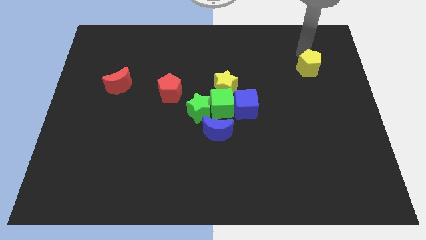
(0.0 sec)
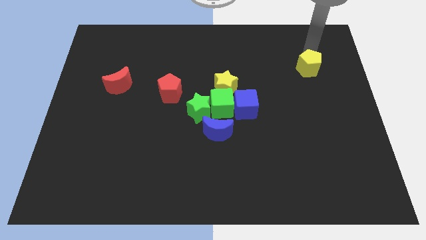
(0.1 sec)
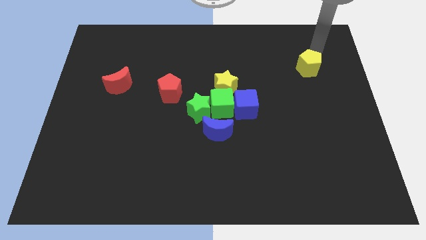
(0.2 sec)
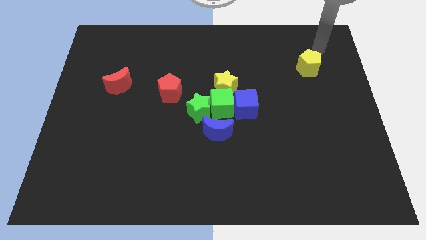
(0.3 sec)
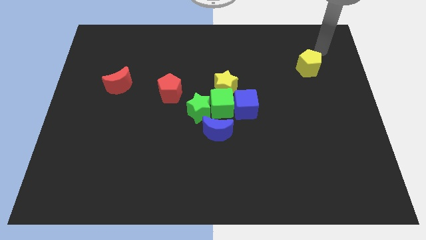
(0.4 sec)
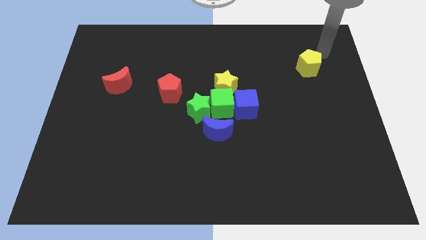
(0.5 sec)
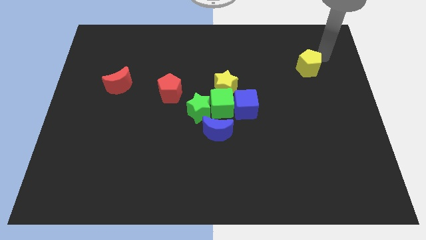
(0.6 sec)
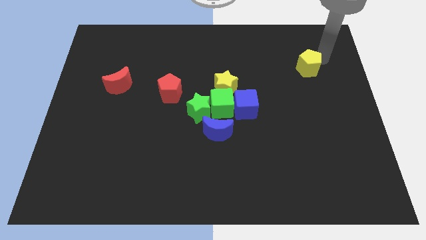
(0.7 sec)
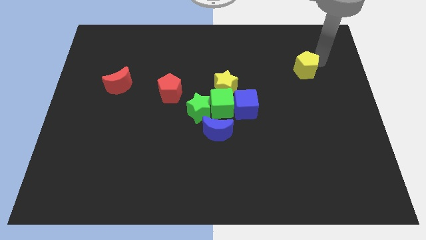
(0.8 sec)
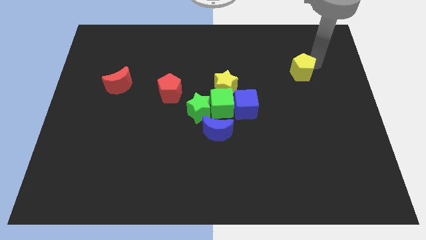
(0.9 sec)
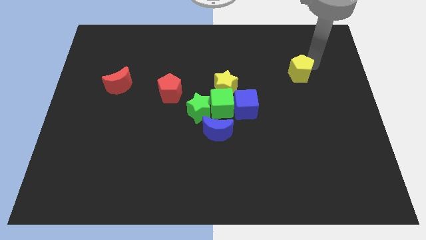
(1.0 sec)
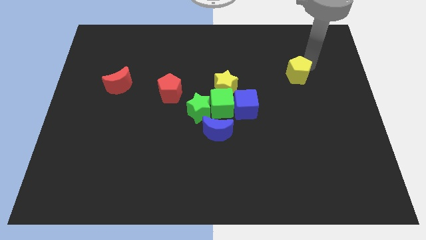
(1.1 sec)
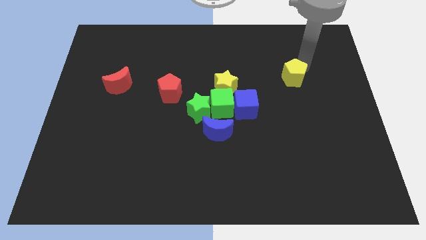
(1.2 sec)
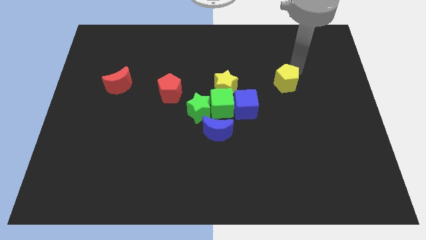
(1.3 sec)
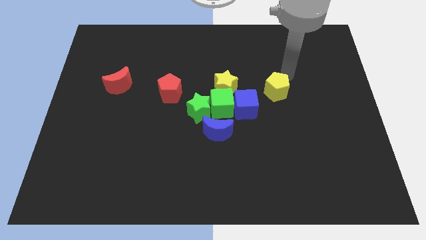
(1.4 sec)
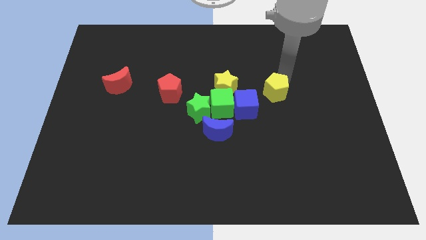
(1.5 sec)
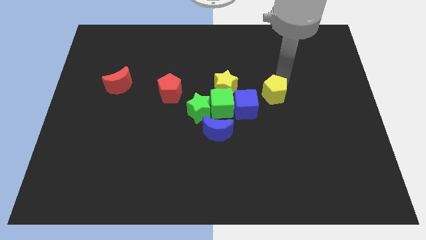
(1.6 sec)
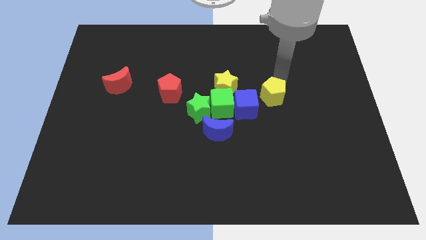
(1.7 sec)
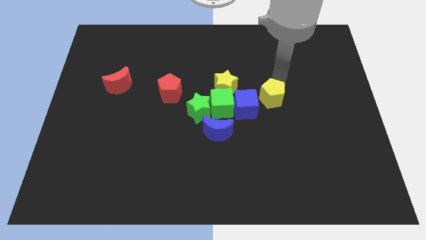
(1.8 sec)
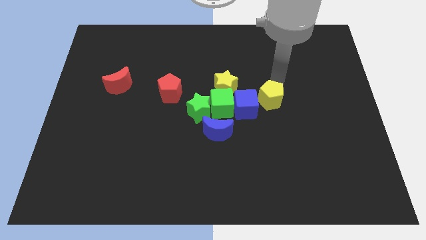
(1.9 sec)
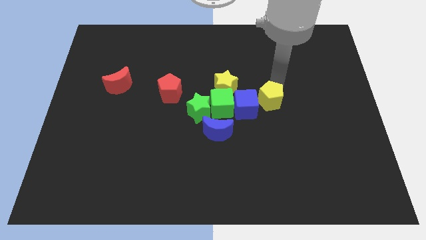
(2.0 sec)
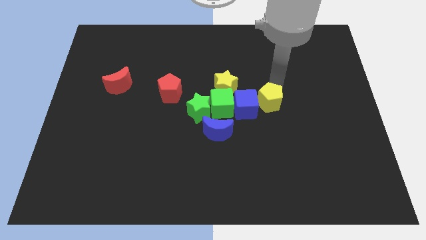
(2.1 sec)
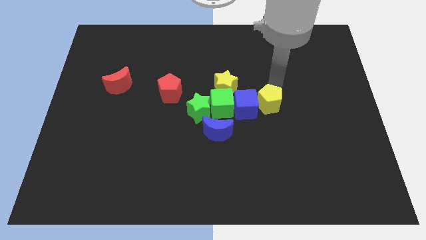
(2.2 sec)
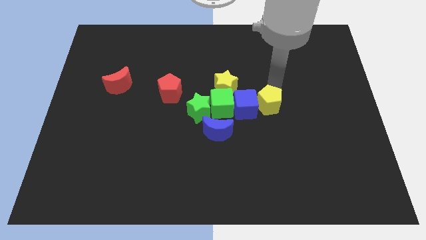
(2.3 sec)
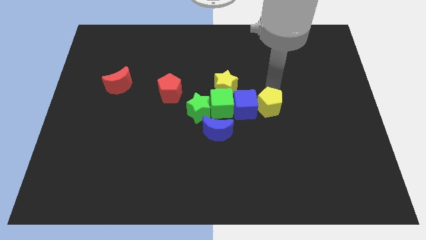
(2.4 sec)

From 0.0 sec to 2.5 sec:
move the yellow pentagon to the right of the blue cube

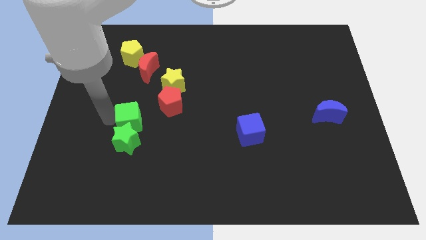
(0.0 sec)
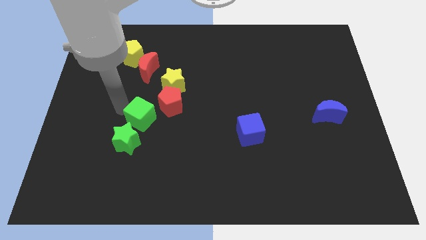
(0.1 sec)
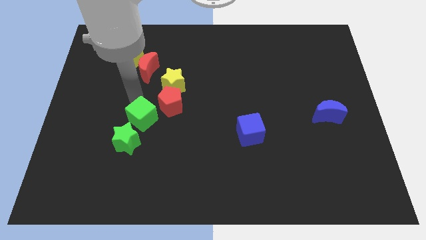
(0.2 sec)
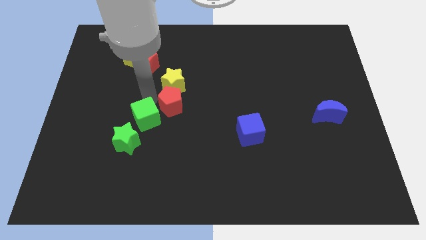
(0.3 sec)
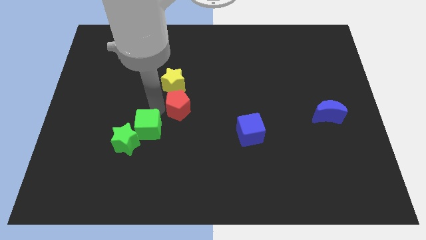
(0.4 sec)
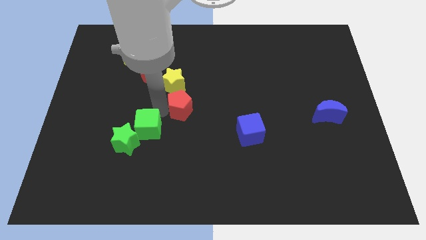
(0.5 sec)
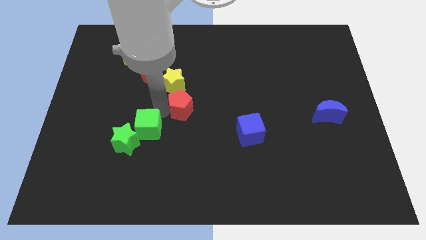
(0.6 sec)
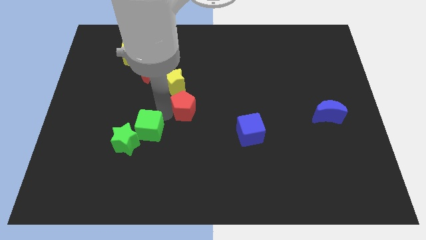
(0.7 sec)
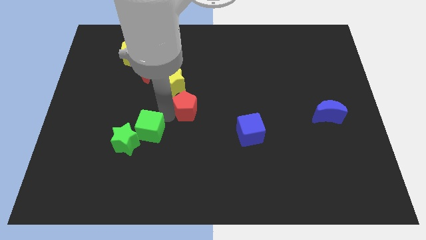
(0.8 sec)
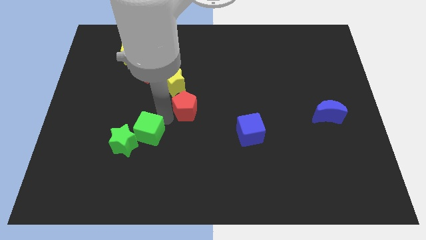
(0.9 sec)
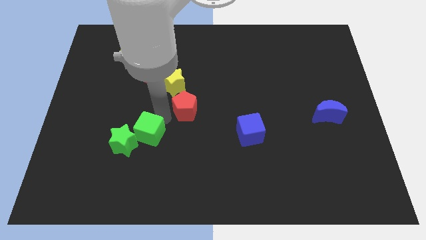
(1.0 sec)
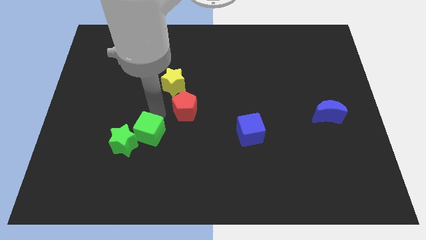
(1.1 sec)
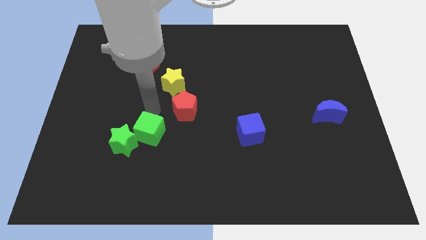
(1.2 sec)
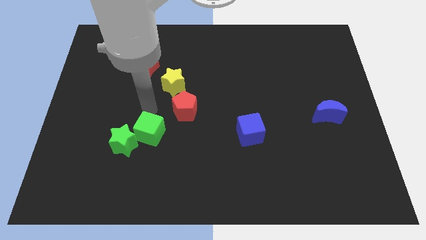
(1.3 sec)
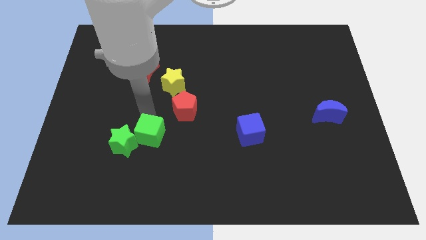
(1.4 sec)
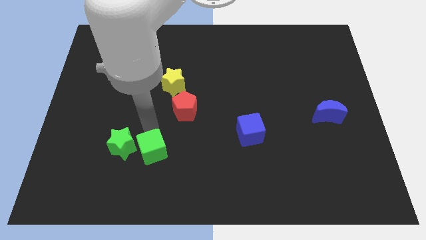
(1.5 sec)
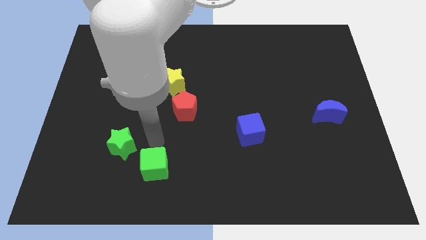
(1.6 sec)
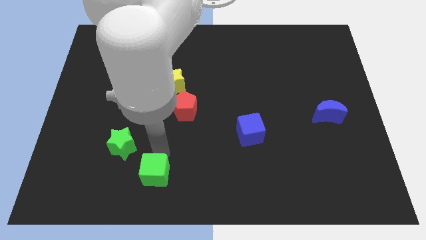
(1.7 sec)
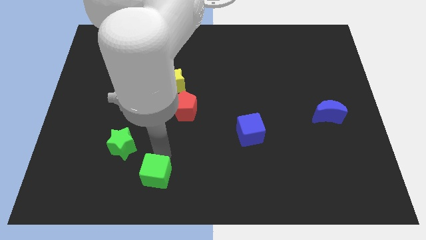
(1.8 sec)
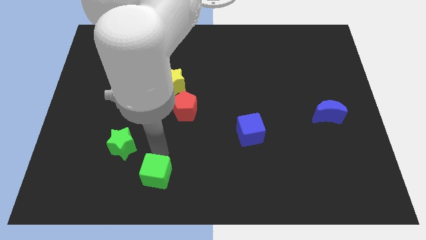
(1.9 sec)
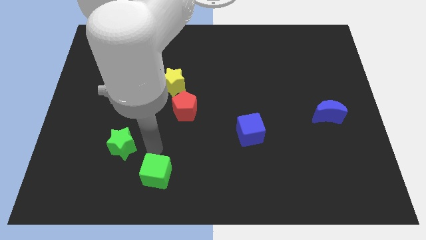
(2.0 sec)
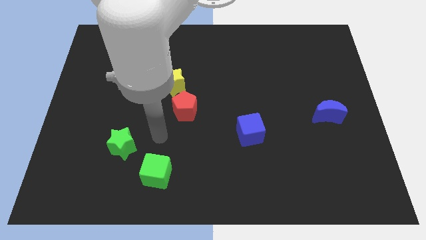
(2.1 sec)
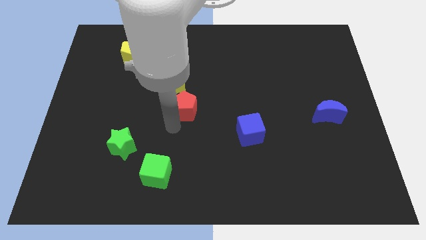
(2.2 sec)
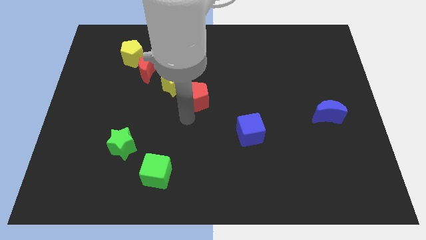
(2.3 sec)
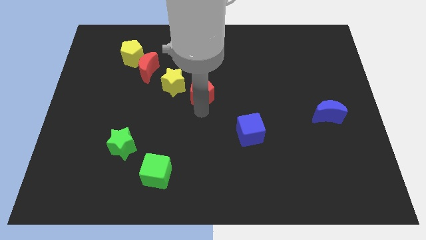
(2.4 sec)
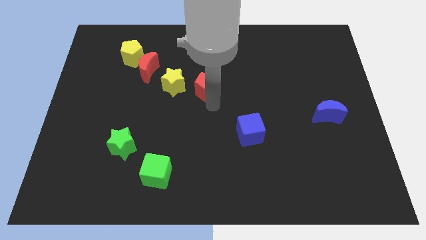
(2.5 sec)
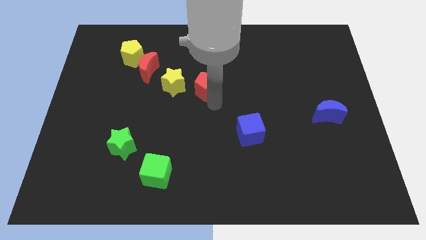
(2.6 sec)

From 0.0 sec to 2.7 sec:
place the red pentagon diagonally top left to the blue cube

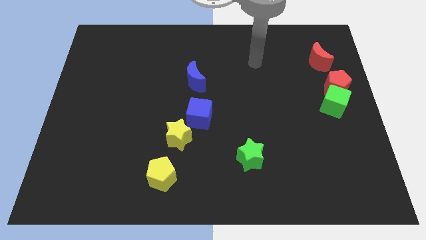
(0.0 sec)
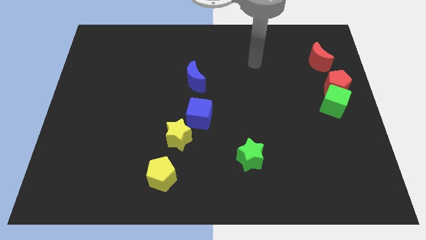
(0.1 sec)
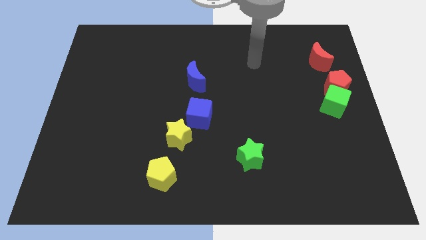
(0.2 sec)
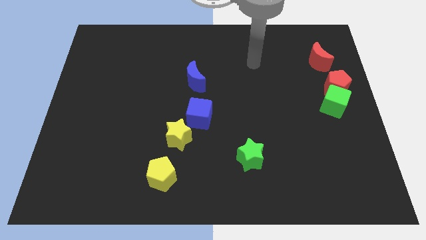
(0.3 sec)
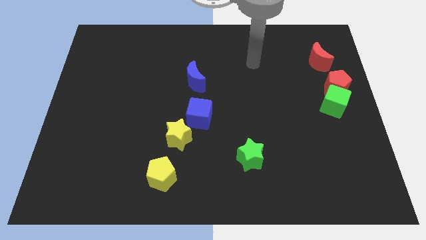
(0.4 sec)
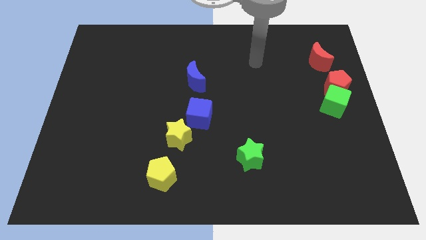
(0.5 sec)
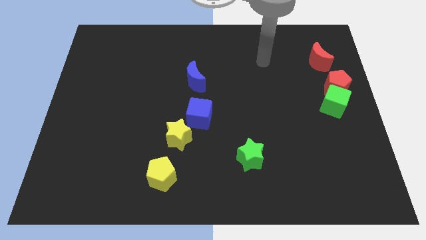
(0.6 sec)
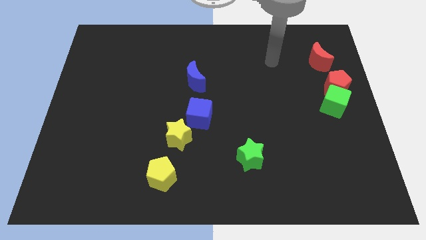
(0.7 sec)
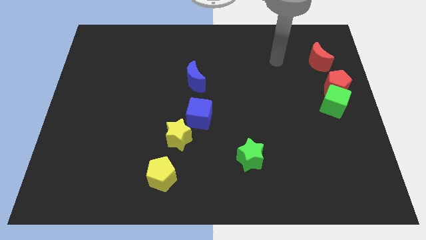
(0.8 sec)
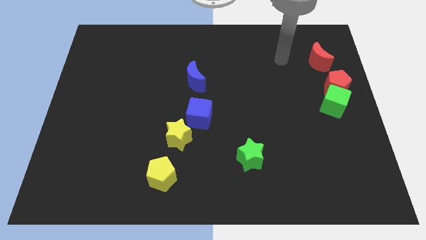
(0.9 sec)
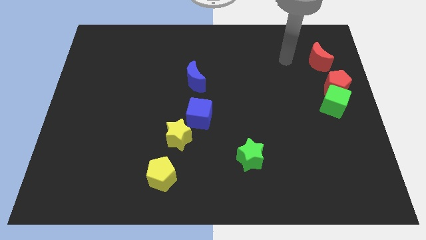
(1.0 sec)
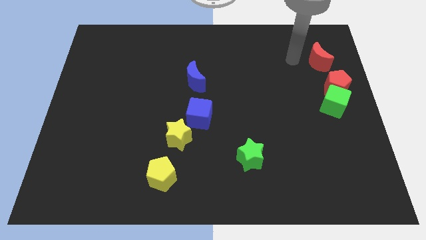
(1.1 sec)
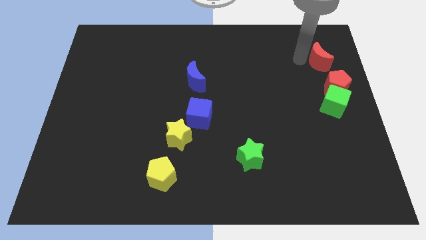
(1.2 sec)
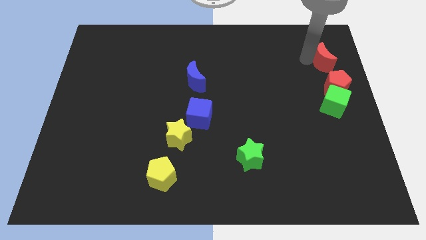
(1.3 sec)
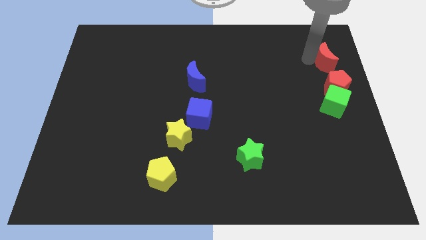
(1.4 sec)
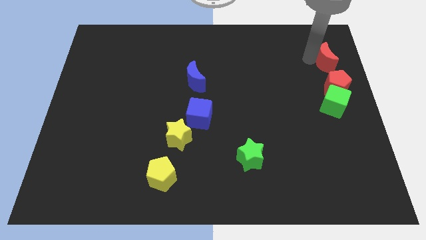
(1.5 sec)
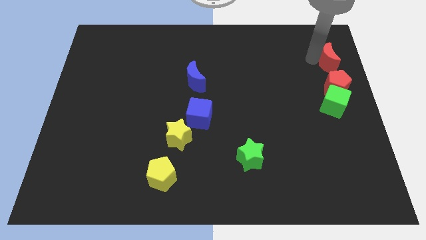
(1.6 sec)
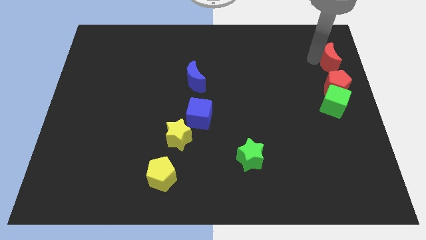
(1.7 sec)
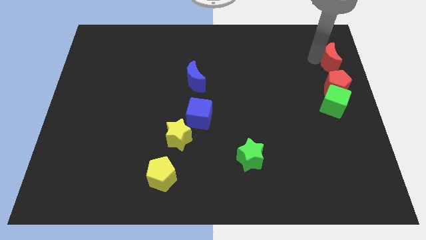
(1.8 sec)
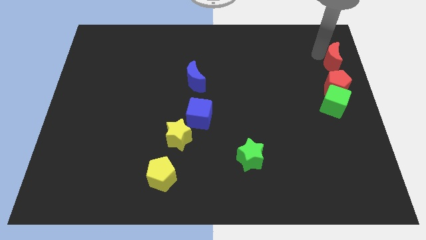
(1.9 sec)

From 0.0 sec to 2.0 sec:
put the red crescent above the red pentagon

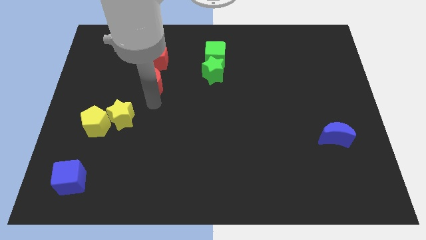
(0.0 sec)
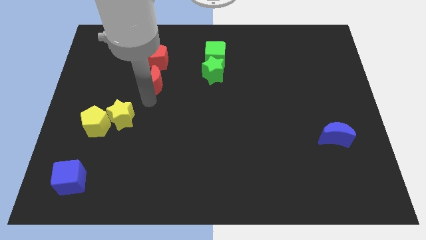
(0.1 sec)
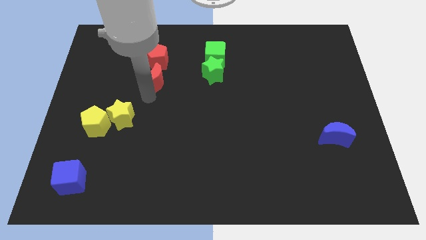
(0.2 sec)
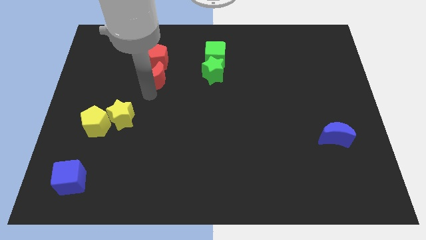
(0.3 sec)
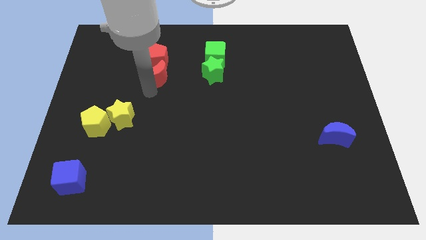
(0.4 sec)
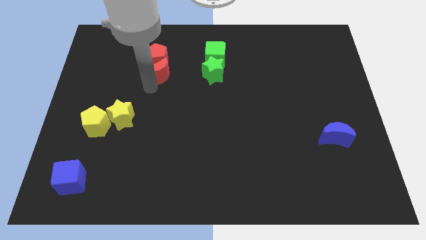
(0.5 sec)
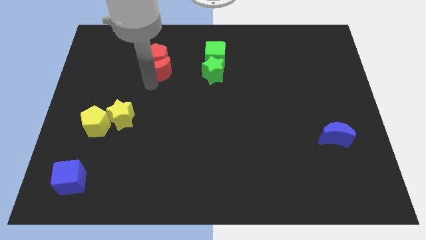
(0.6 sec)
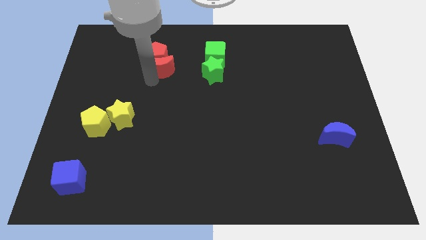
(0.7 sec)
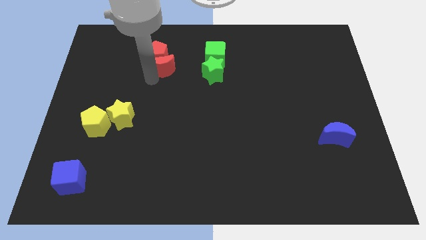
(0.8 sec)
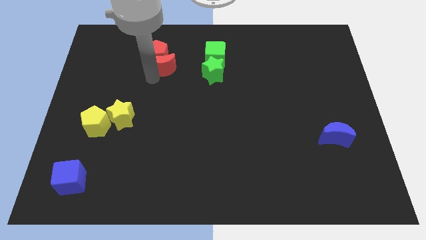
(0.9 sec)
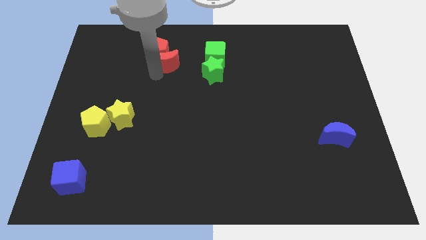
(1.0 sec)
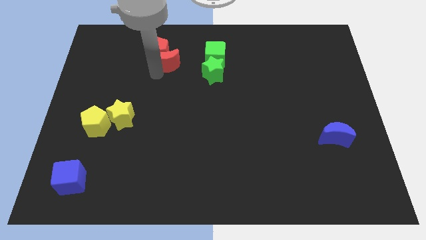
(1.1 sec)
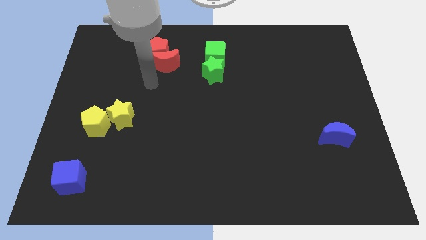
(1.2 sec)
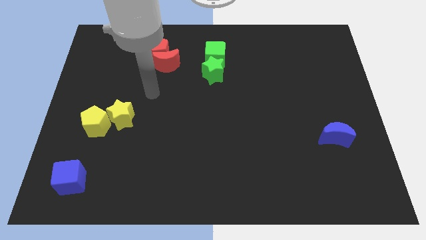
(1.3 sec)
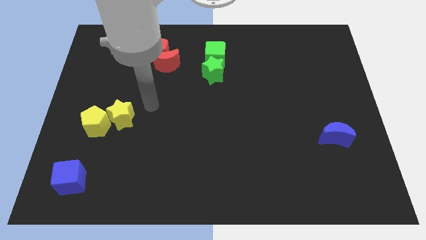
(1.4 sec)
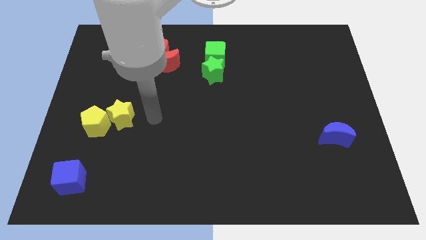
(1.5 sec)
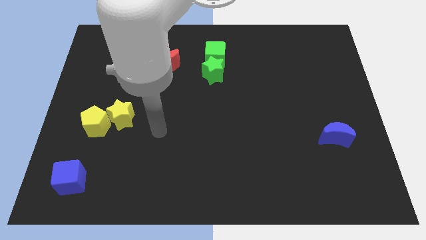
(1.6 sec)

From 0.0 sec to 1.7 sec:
push the red crescent into the red pentagon
